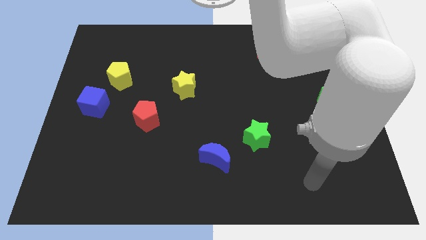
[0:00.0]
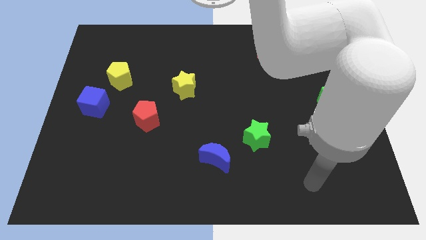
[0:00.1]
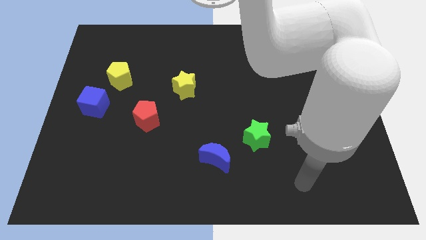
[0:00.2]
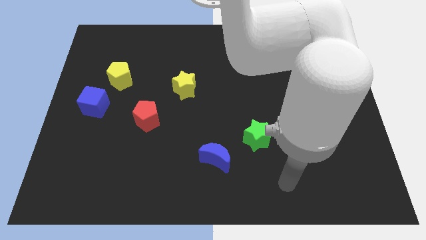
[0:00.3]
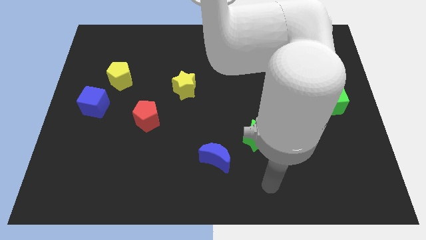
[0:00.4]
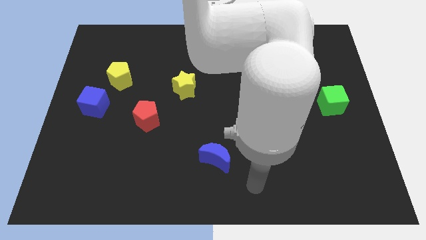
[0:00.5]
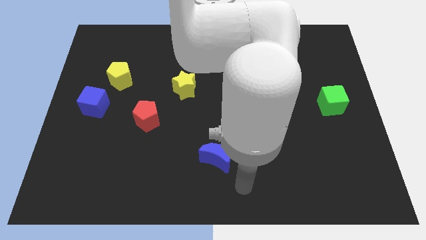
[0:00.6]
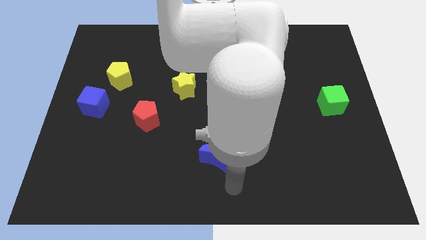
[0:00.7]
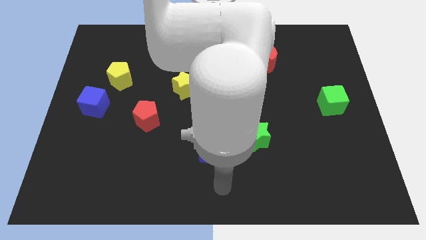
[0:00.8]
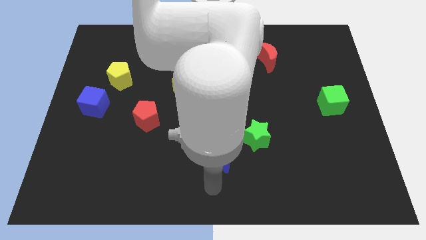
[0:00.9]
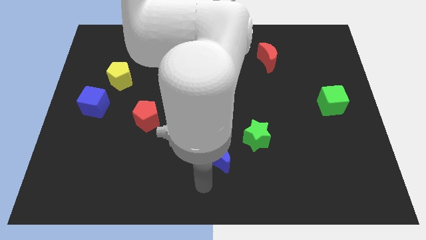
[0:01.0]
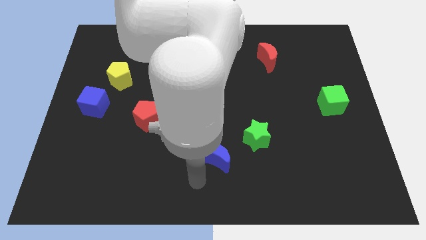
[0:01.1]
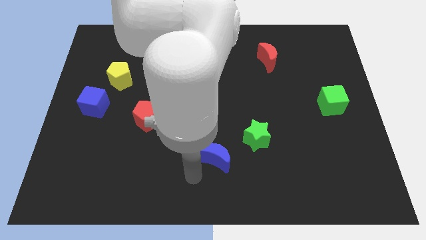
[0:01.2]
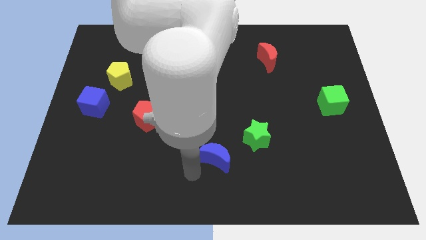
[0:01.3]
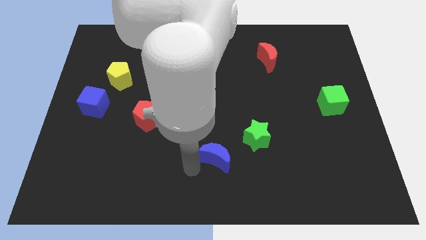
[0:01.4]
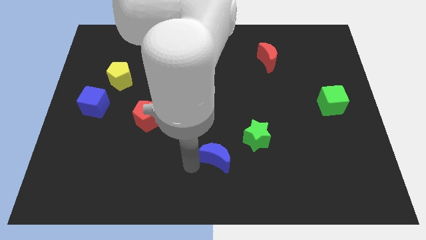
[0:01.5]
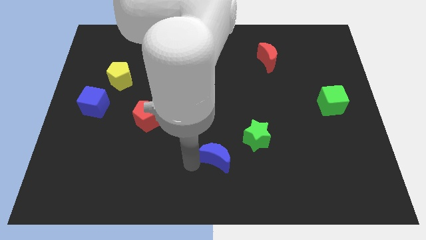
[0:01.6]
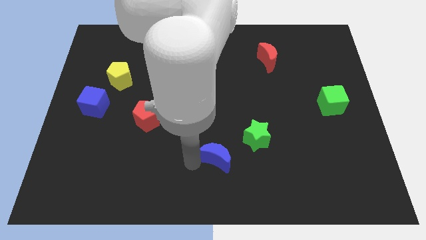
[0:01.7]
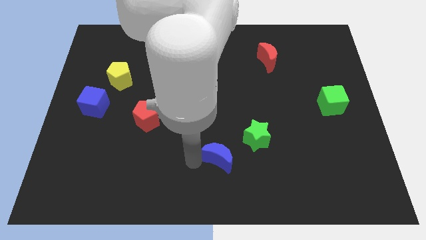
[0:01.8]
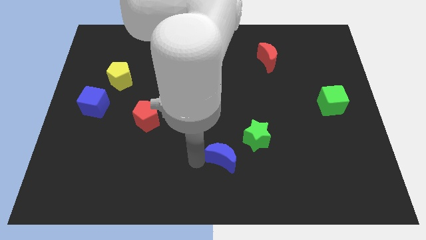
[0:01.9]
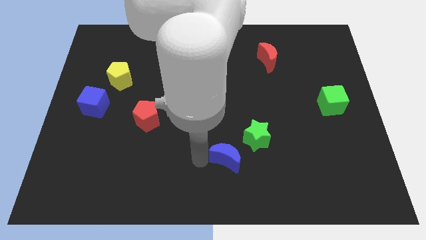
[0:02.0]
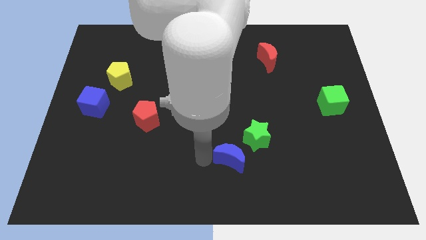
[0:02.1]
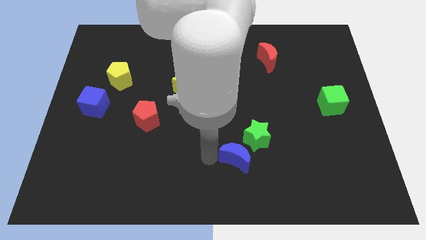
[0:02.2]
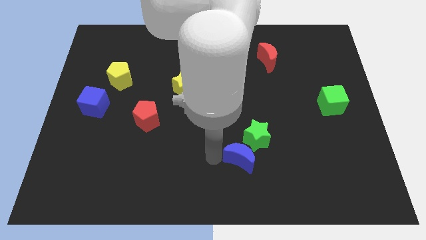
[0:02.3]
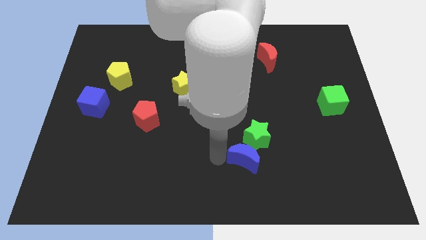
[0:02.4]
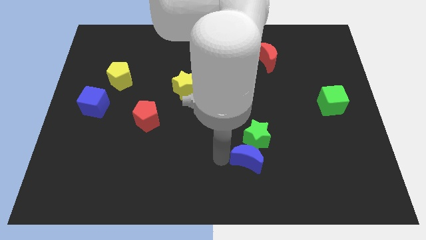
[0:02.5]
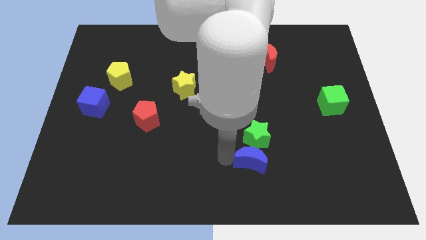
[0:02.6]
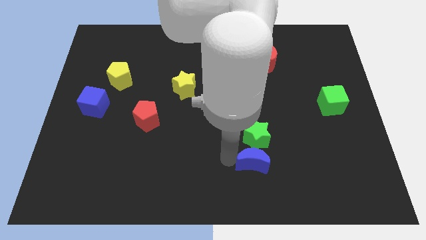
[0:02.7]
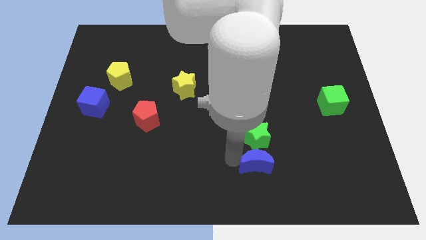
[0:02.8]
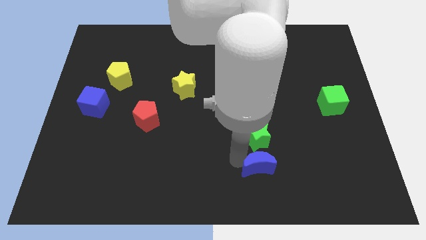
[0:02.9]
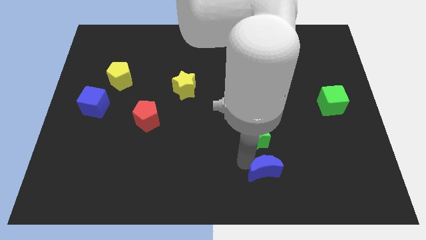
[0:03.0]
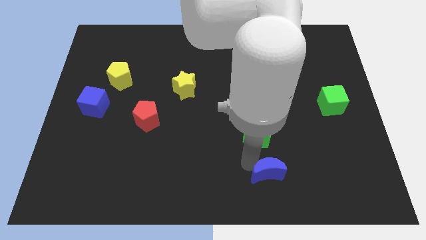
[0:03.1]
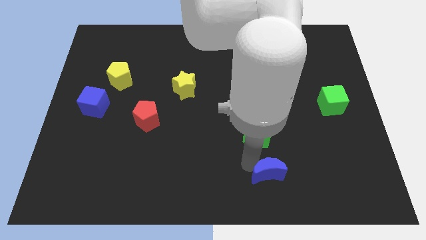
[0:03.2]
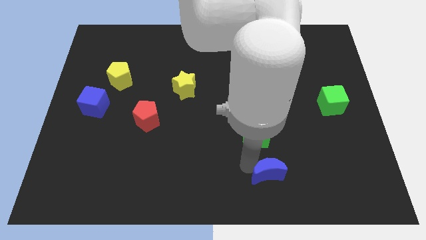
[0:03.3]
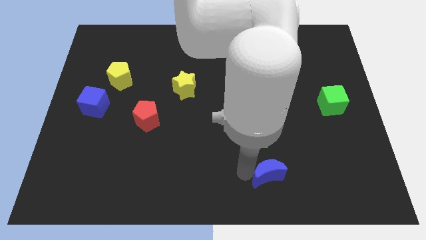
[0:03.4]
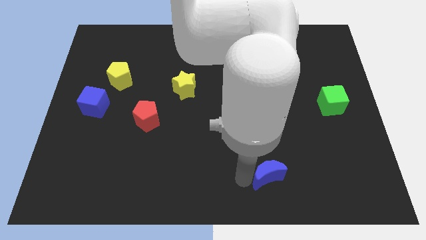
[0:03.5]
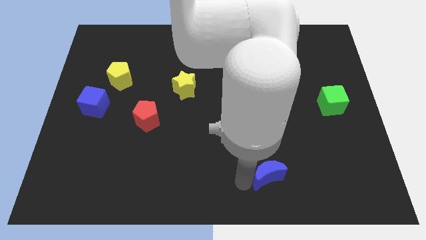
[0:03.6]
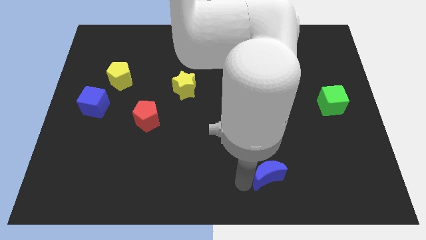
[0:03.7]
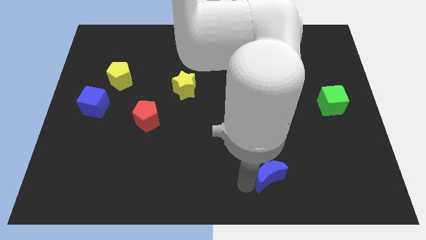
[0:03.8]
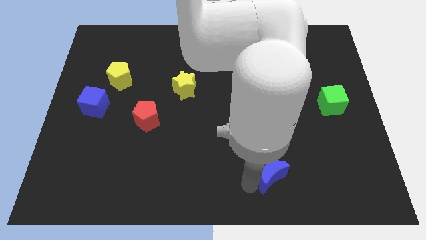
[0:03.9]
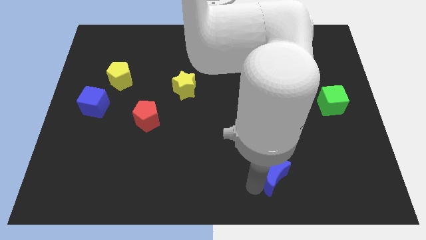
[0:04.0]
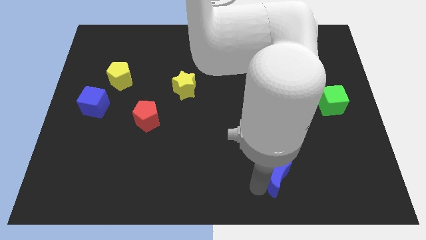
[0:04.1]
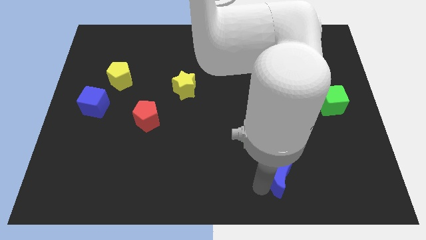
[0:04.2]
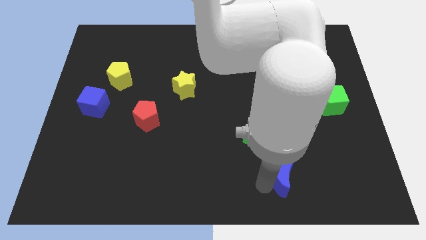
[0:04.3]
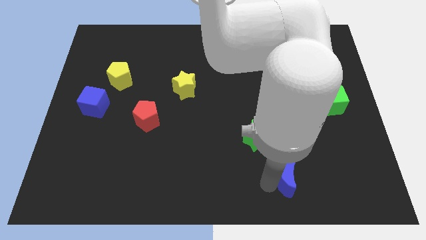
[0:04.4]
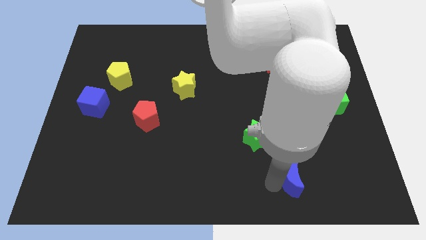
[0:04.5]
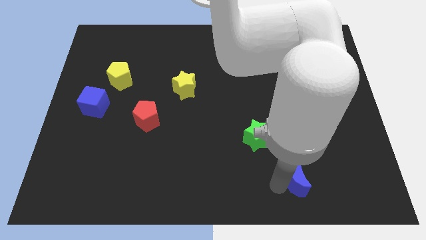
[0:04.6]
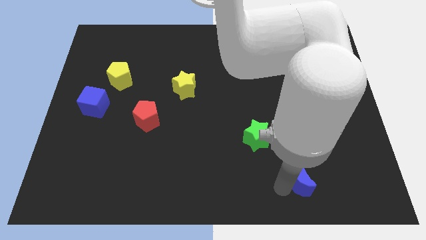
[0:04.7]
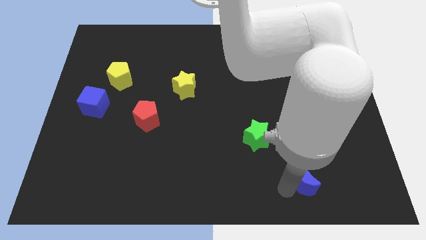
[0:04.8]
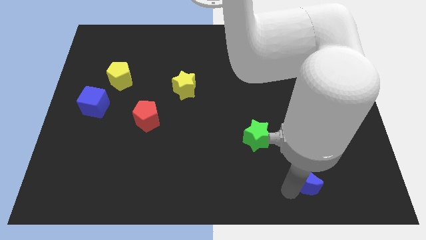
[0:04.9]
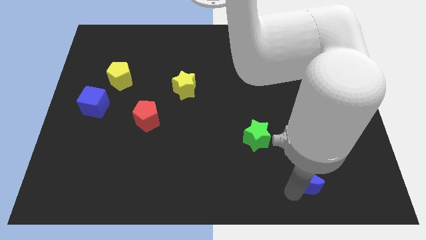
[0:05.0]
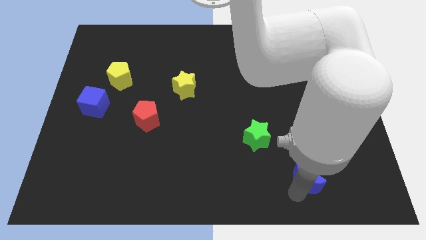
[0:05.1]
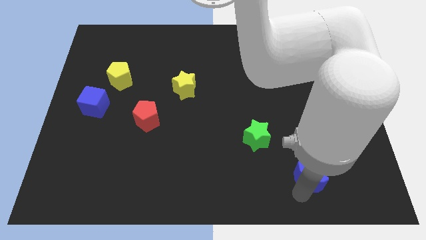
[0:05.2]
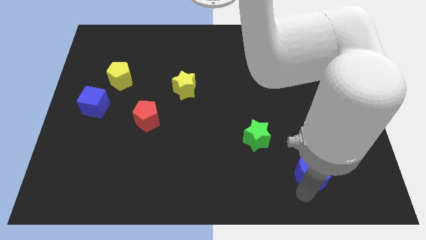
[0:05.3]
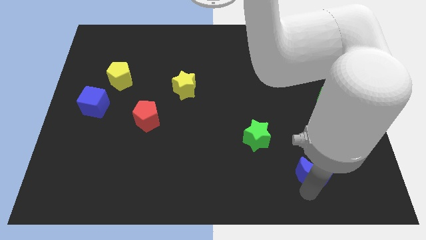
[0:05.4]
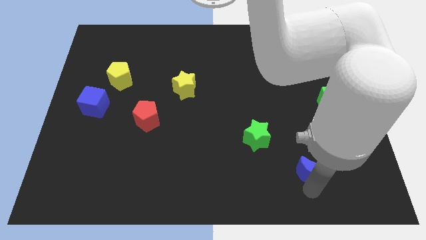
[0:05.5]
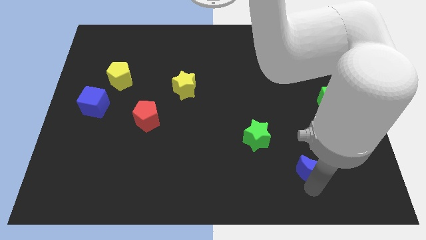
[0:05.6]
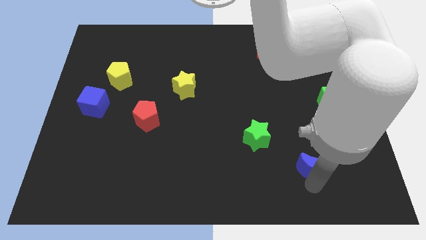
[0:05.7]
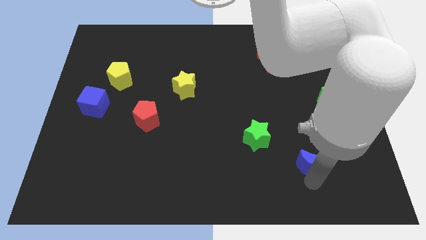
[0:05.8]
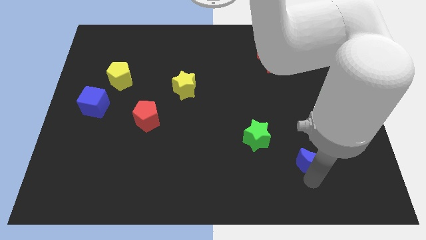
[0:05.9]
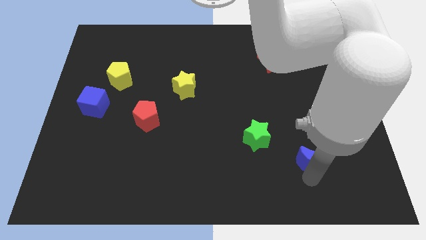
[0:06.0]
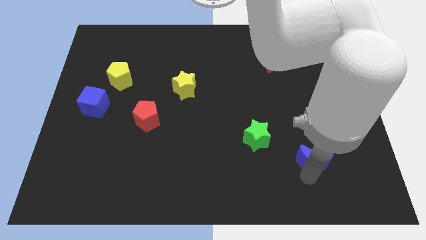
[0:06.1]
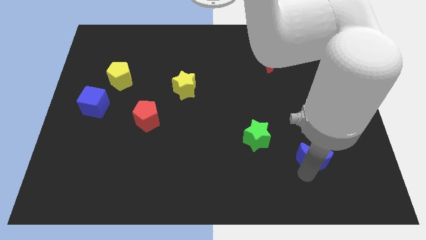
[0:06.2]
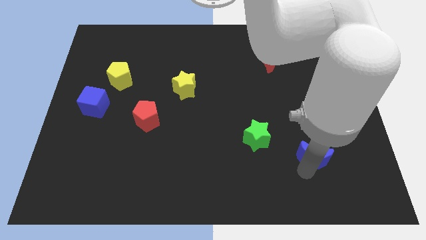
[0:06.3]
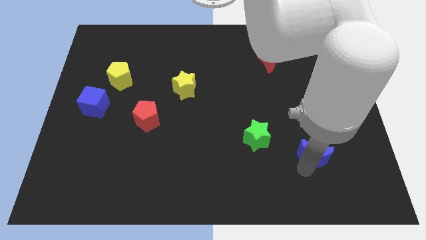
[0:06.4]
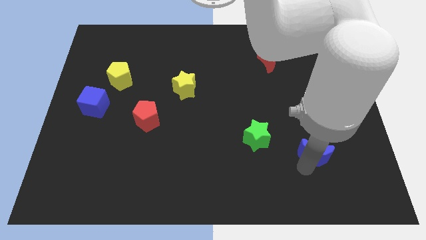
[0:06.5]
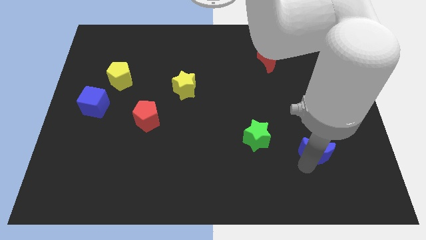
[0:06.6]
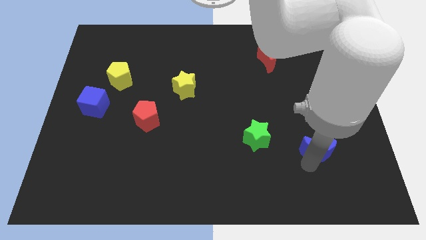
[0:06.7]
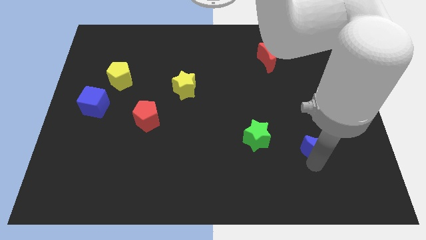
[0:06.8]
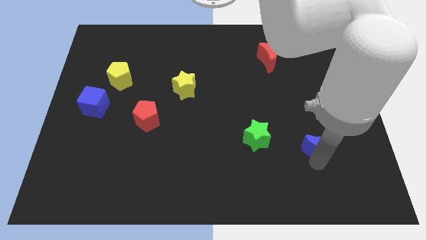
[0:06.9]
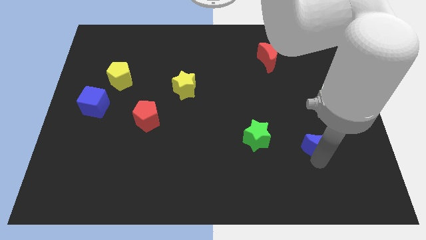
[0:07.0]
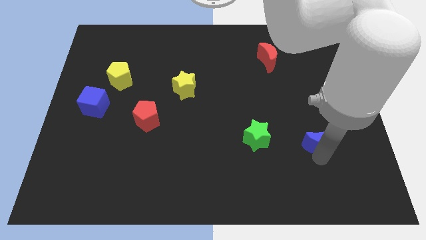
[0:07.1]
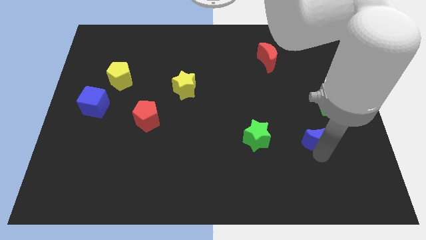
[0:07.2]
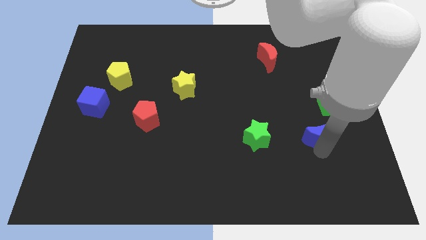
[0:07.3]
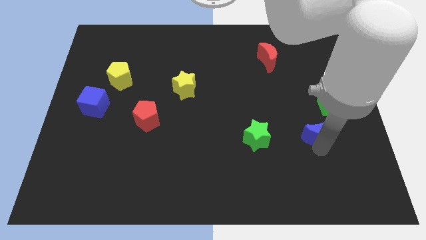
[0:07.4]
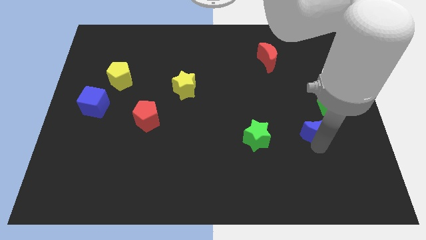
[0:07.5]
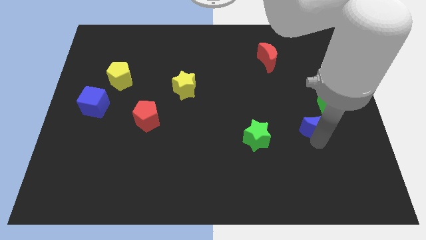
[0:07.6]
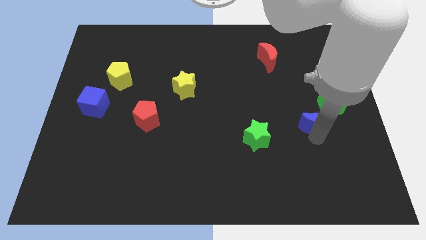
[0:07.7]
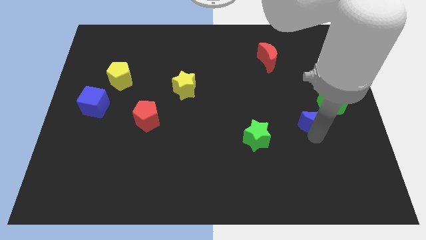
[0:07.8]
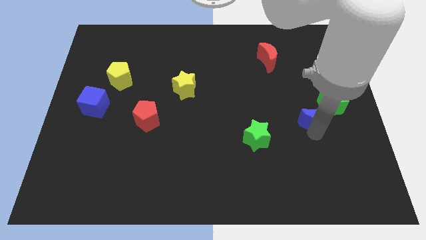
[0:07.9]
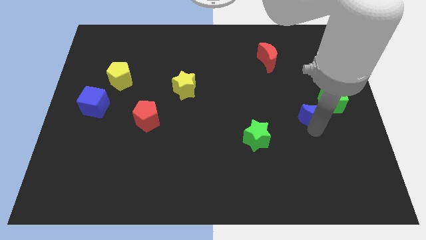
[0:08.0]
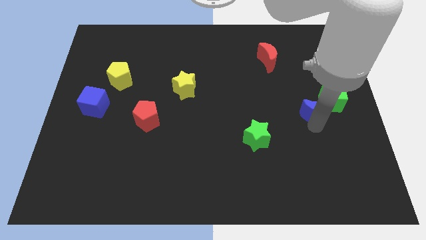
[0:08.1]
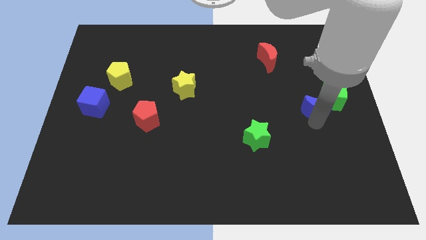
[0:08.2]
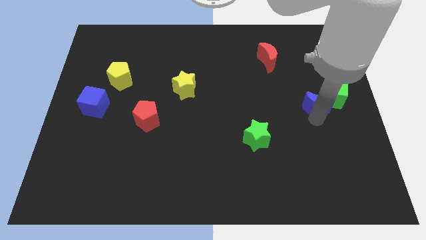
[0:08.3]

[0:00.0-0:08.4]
move the blue moon close to the green cube
